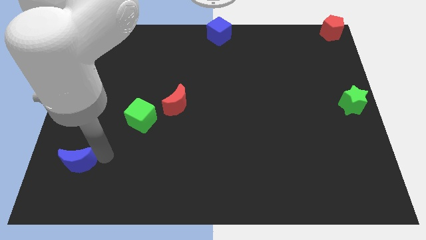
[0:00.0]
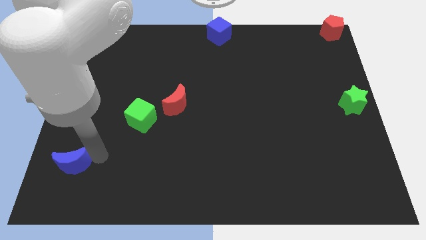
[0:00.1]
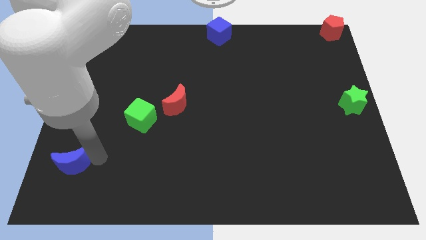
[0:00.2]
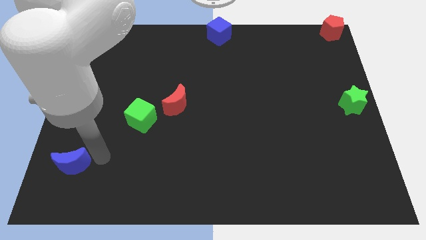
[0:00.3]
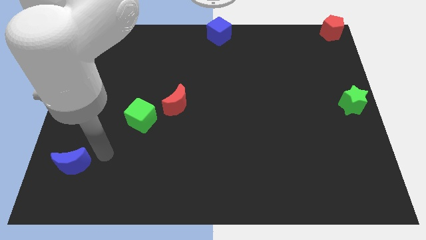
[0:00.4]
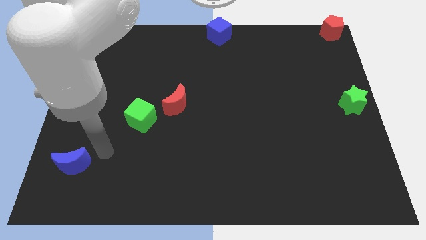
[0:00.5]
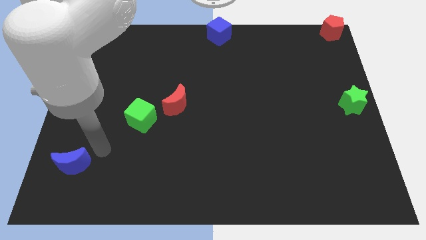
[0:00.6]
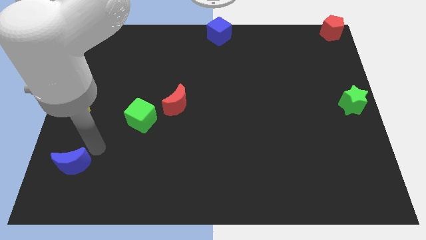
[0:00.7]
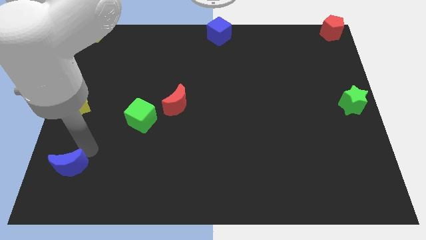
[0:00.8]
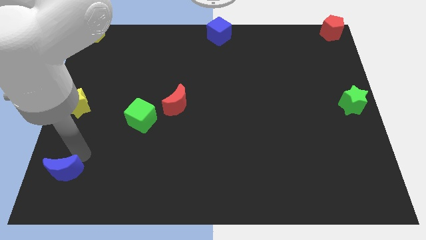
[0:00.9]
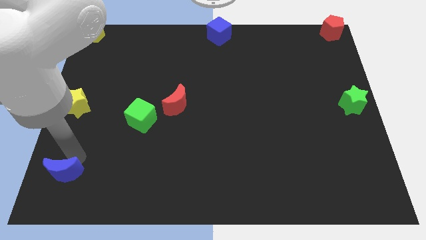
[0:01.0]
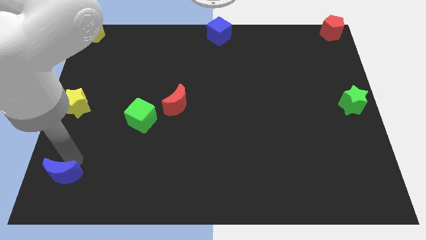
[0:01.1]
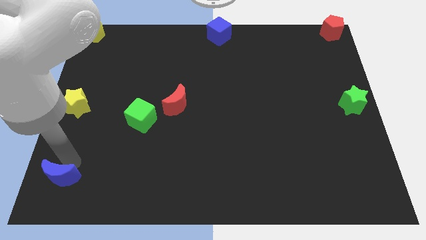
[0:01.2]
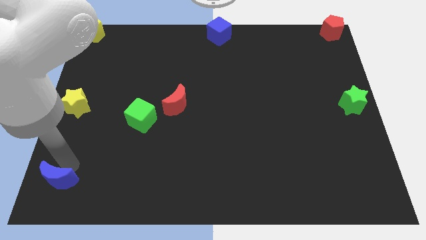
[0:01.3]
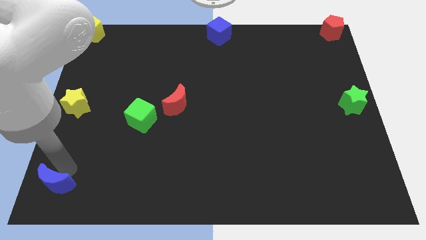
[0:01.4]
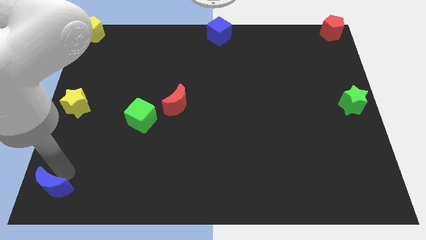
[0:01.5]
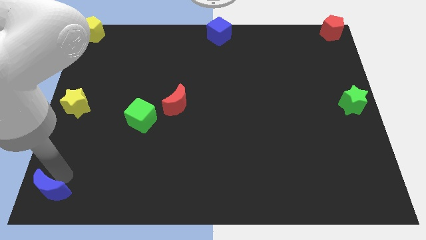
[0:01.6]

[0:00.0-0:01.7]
move the blue crescent to the left bottom corner

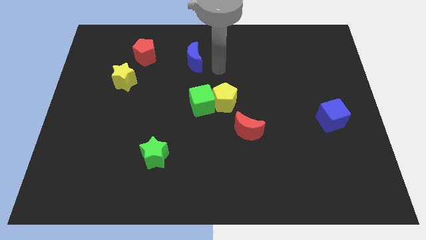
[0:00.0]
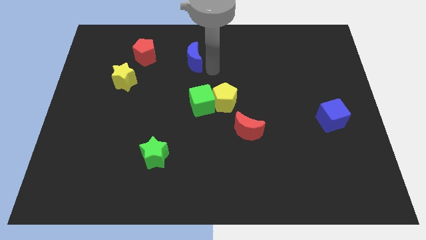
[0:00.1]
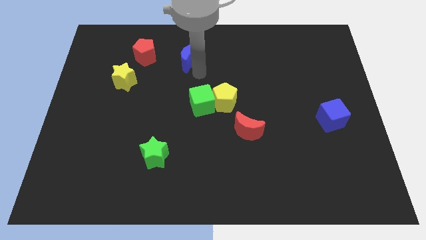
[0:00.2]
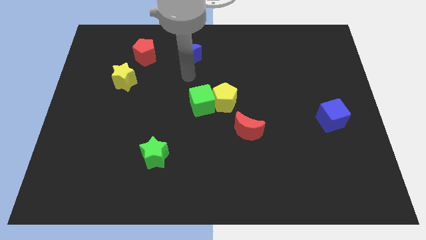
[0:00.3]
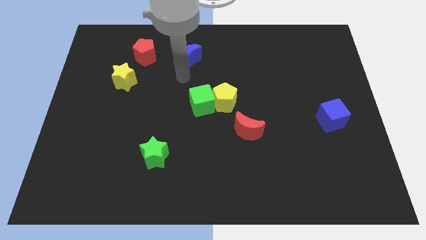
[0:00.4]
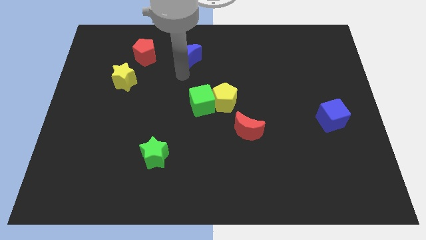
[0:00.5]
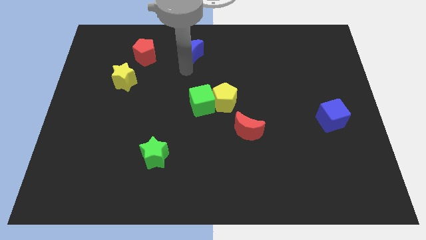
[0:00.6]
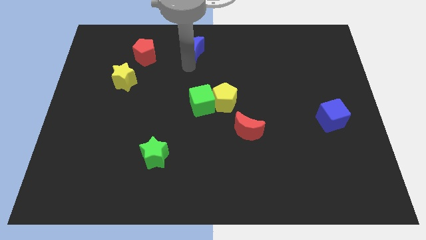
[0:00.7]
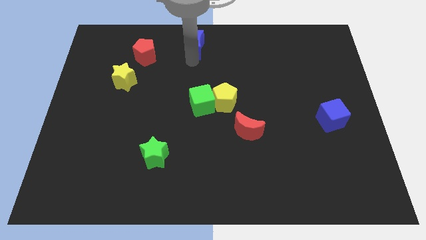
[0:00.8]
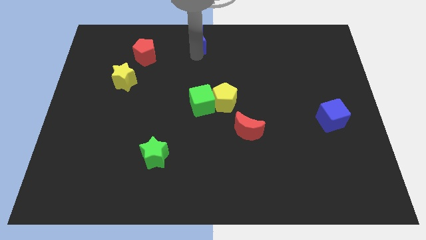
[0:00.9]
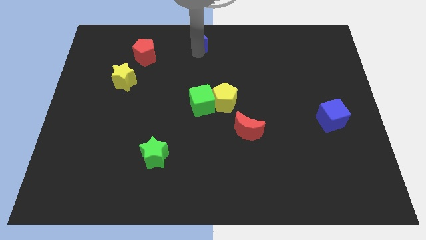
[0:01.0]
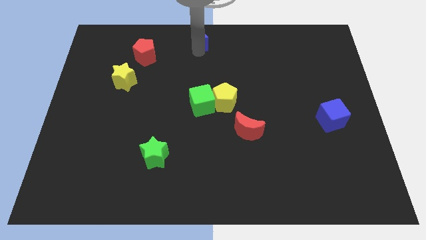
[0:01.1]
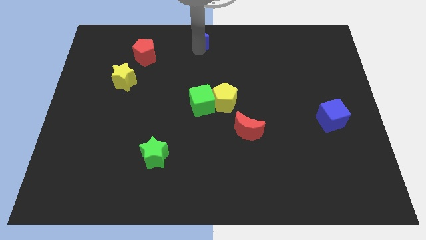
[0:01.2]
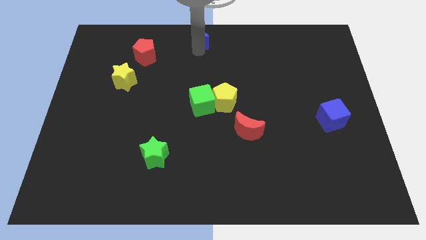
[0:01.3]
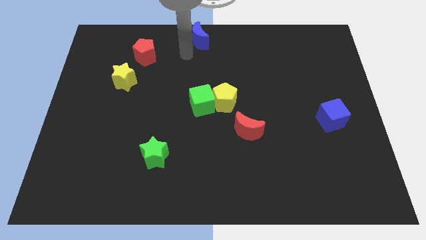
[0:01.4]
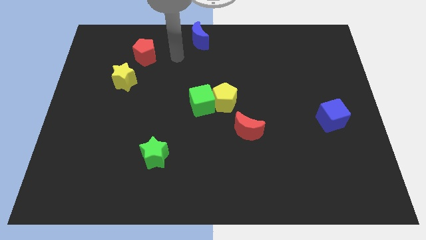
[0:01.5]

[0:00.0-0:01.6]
place the blue moon at the top center of the board

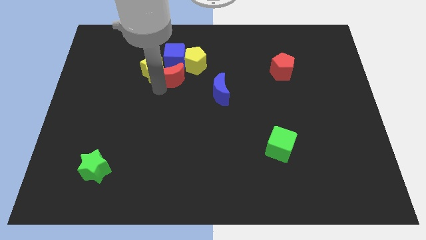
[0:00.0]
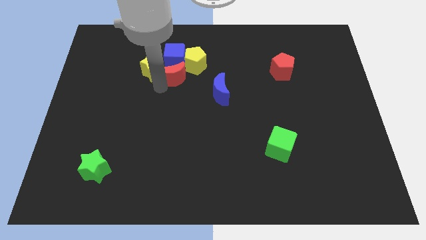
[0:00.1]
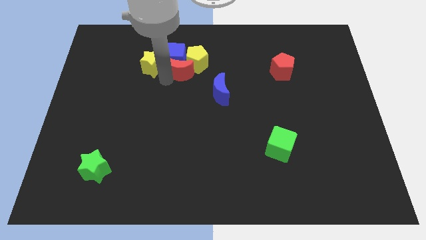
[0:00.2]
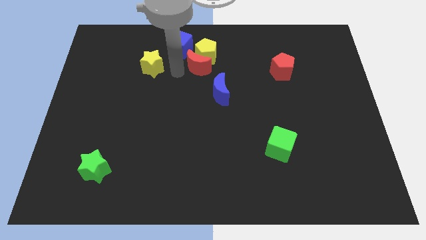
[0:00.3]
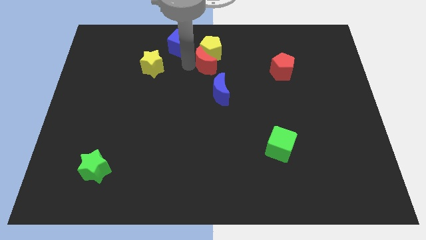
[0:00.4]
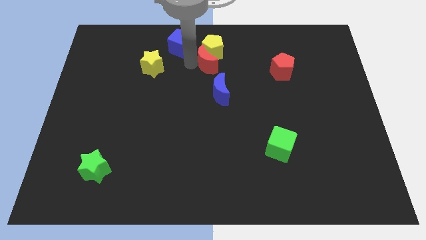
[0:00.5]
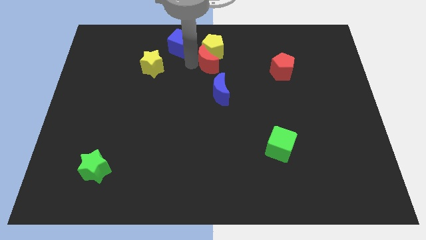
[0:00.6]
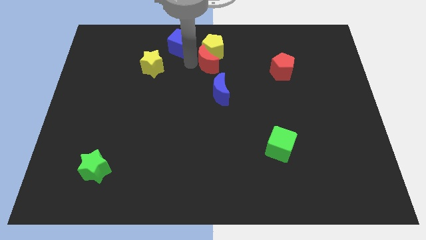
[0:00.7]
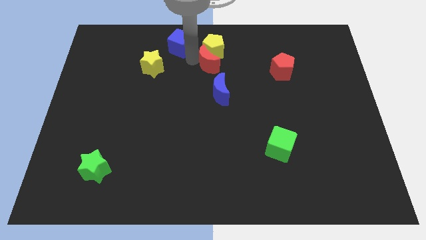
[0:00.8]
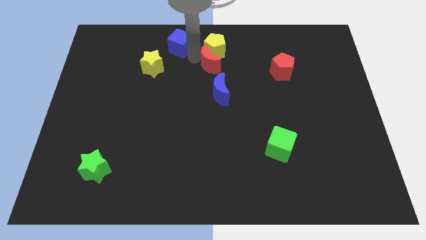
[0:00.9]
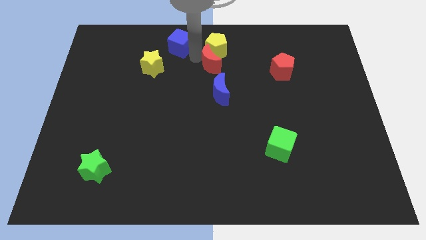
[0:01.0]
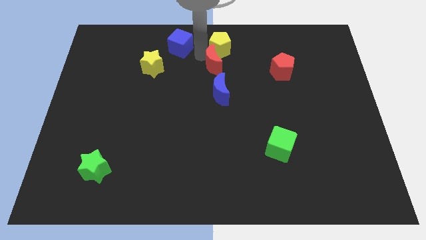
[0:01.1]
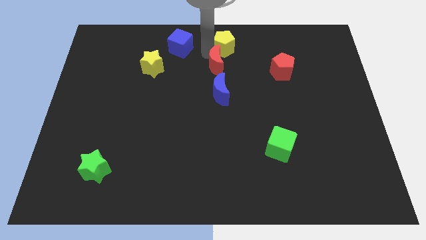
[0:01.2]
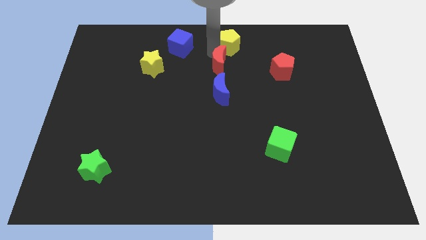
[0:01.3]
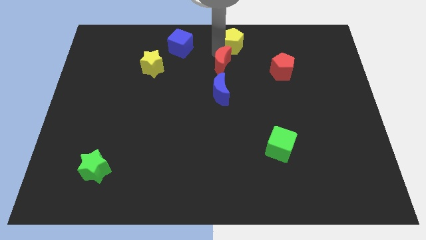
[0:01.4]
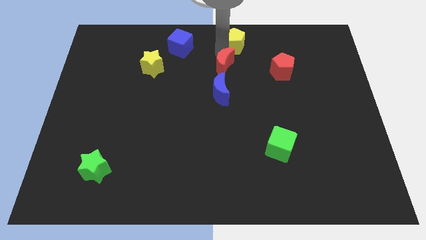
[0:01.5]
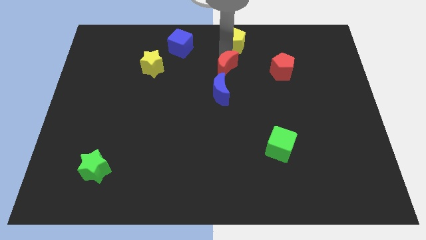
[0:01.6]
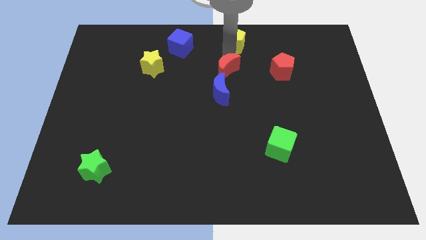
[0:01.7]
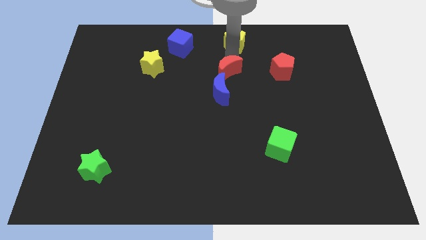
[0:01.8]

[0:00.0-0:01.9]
place the red moon in between the yellow pentagon and blue moon

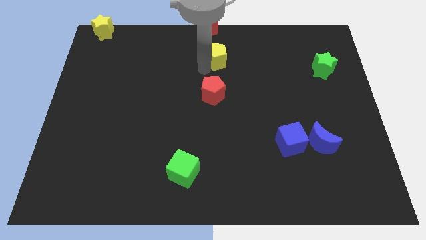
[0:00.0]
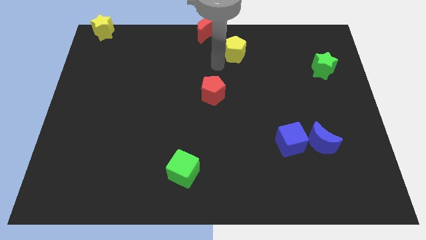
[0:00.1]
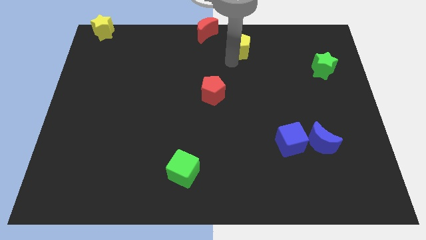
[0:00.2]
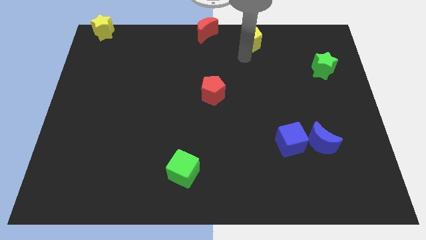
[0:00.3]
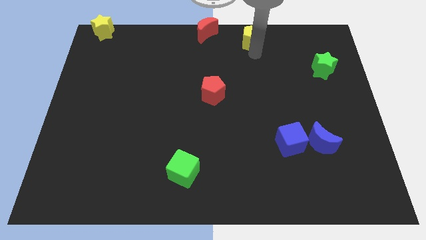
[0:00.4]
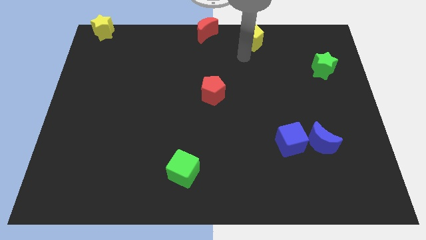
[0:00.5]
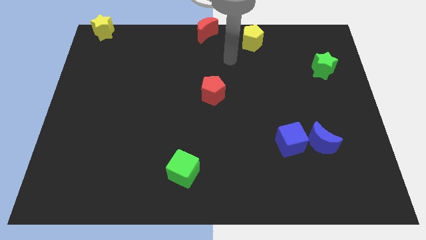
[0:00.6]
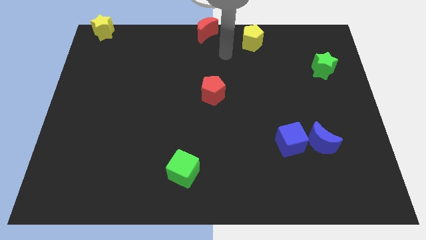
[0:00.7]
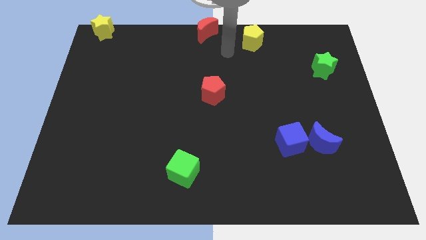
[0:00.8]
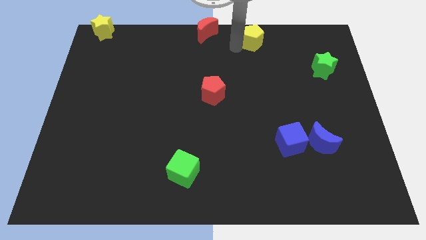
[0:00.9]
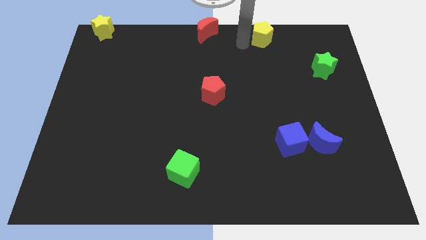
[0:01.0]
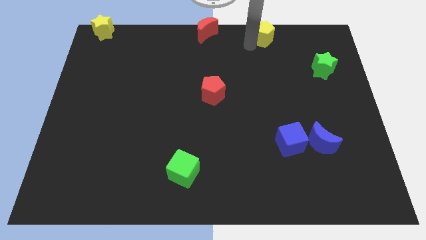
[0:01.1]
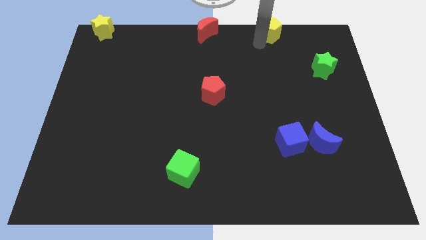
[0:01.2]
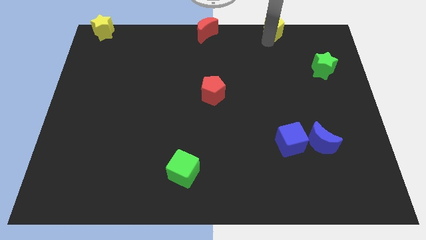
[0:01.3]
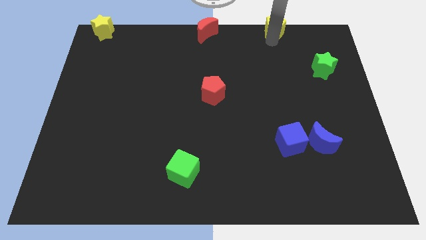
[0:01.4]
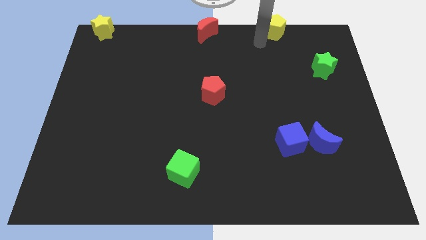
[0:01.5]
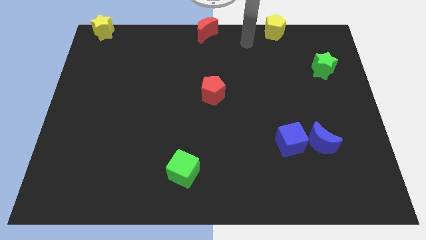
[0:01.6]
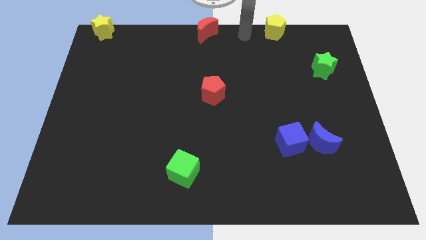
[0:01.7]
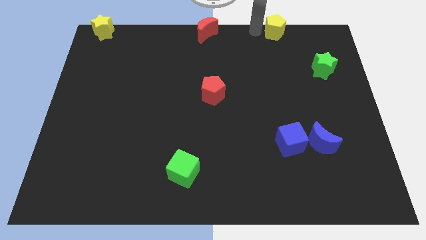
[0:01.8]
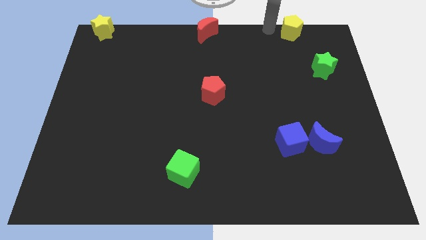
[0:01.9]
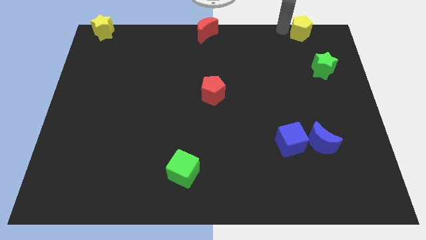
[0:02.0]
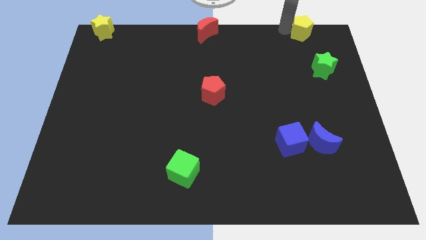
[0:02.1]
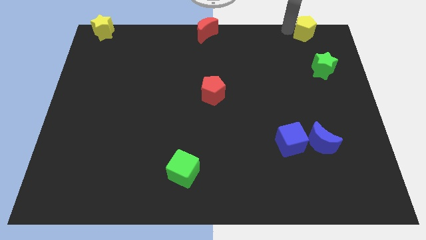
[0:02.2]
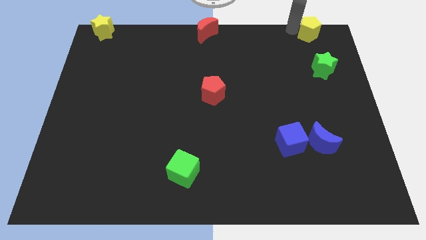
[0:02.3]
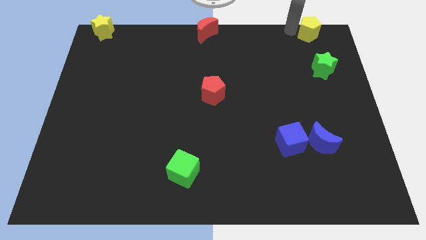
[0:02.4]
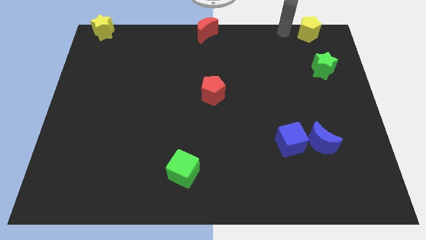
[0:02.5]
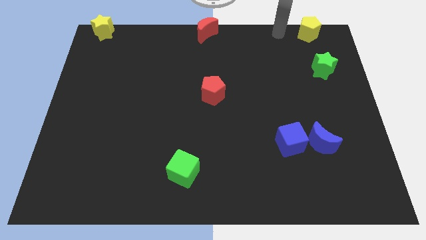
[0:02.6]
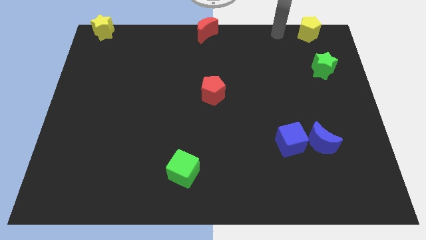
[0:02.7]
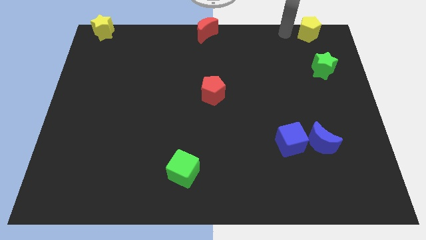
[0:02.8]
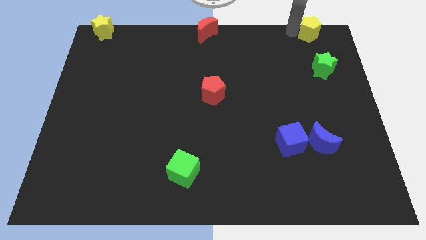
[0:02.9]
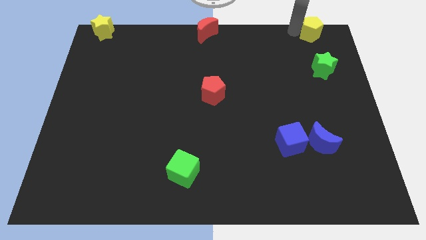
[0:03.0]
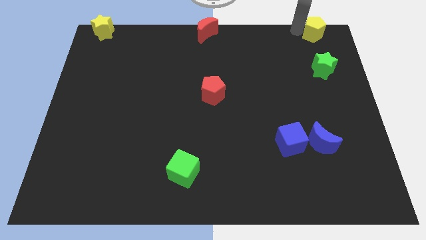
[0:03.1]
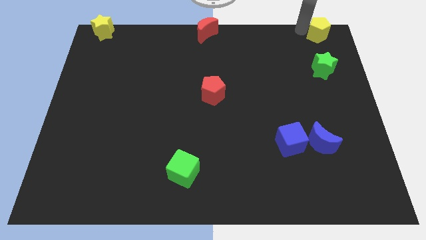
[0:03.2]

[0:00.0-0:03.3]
put the yellow pentagon above the green star

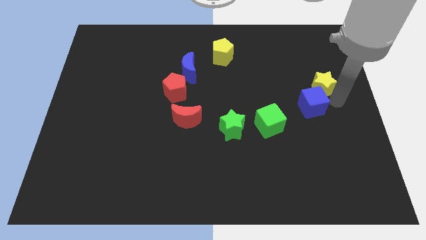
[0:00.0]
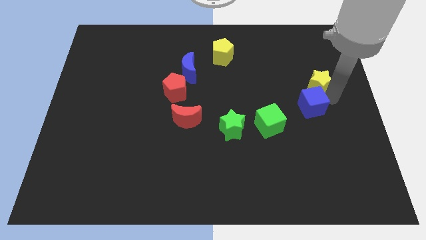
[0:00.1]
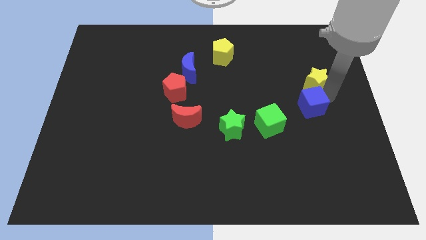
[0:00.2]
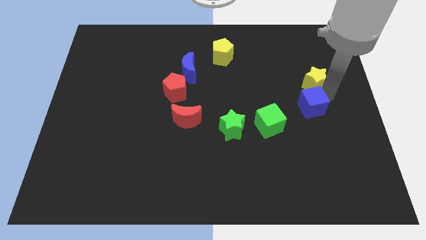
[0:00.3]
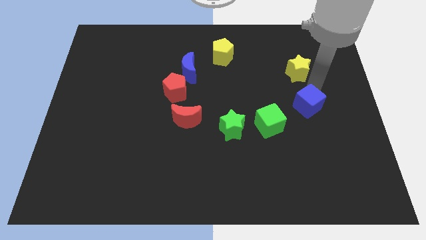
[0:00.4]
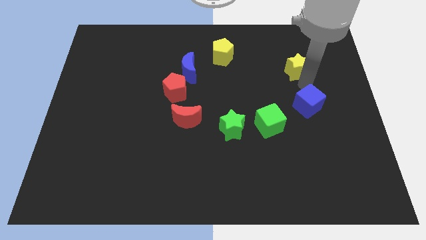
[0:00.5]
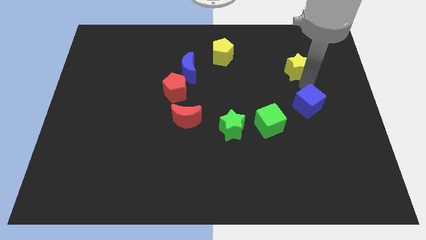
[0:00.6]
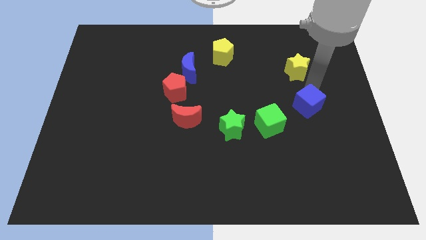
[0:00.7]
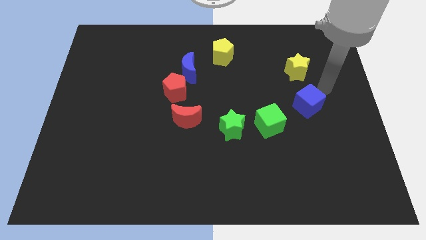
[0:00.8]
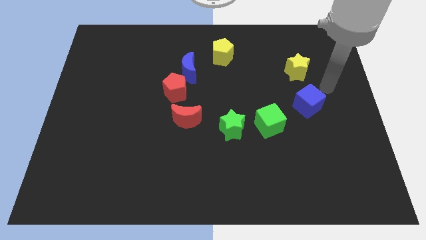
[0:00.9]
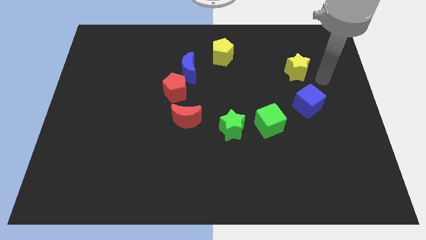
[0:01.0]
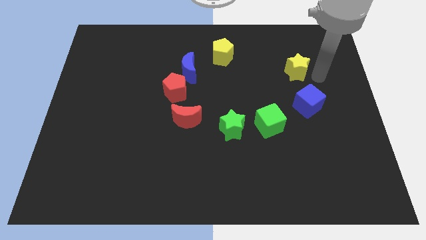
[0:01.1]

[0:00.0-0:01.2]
separate the blue cube and yellow star
